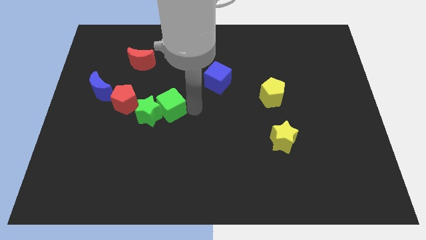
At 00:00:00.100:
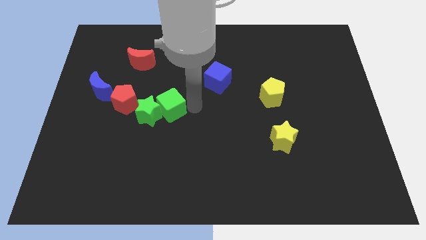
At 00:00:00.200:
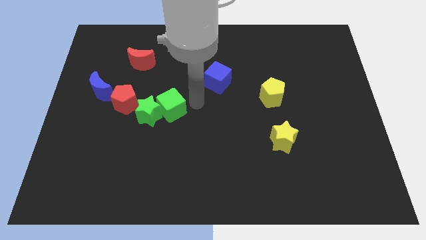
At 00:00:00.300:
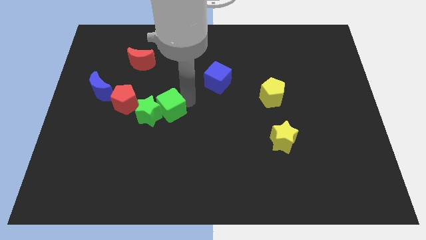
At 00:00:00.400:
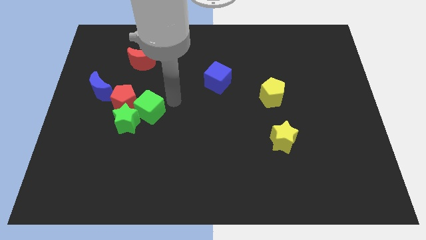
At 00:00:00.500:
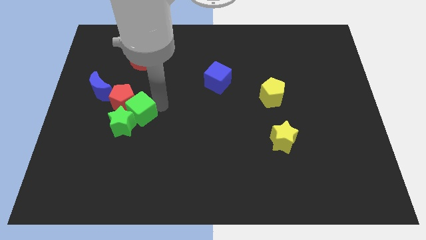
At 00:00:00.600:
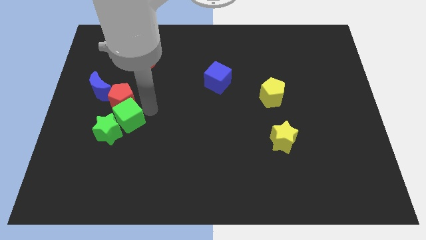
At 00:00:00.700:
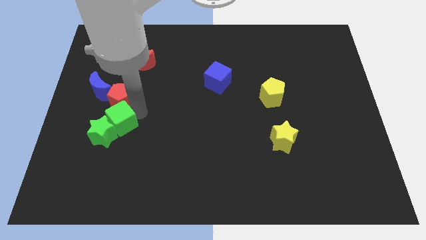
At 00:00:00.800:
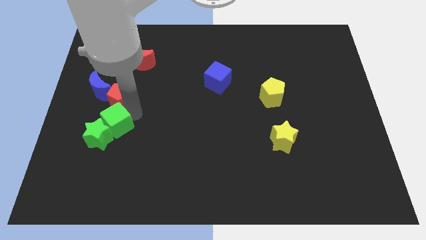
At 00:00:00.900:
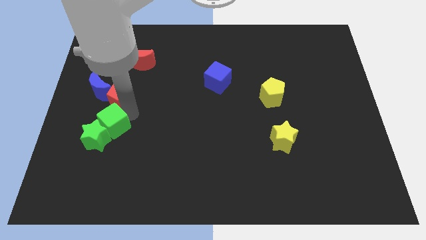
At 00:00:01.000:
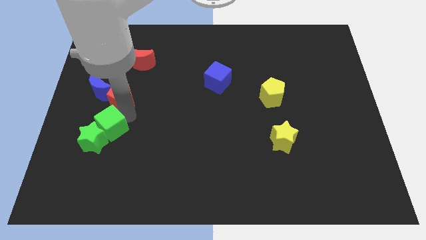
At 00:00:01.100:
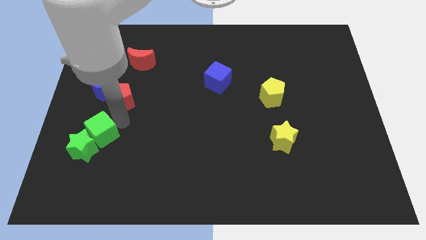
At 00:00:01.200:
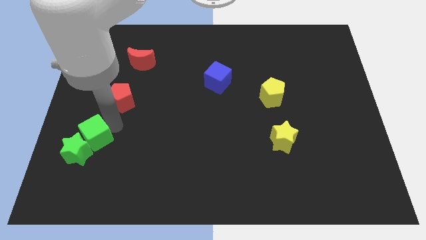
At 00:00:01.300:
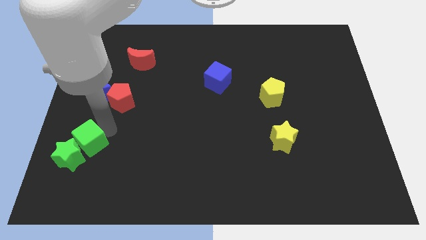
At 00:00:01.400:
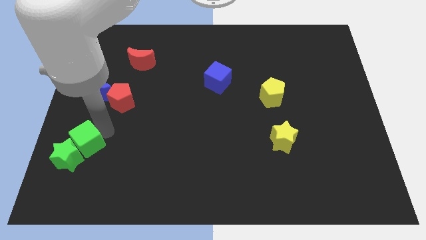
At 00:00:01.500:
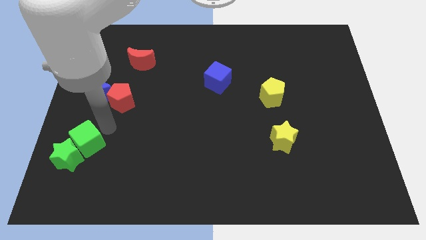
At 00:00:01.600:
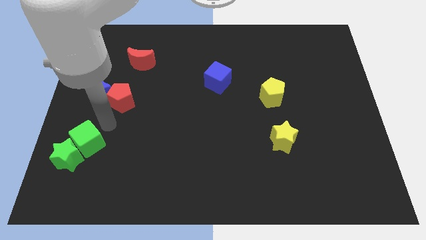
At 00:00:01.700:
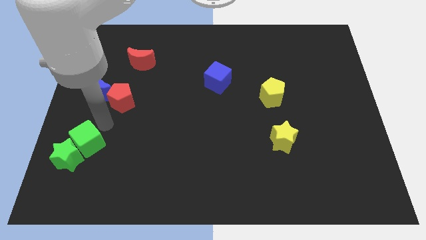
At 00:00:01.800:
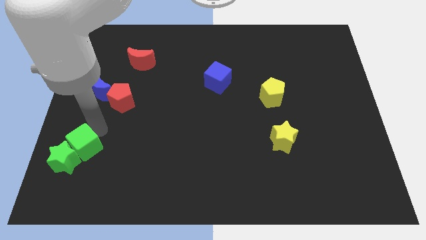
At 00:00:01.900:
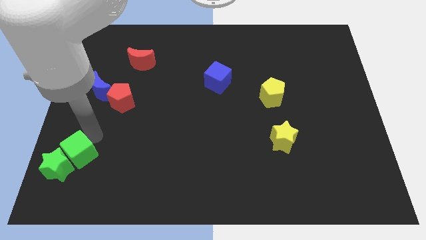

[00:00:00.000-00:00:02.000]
push the green cube into the green star

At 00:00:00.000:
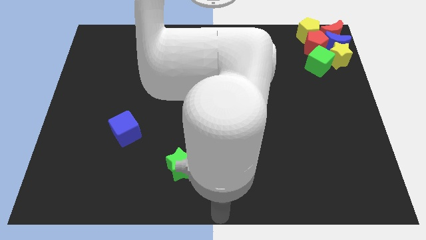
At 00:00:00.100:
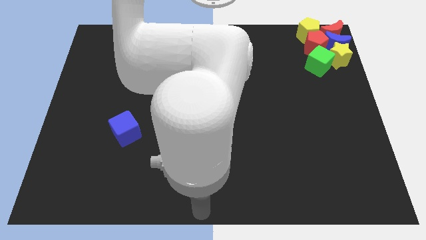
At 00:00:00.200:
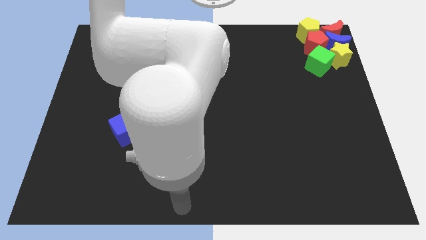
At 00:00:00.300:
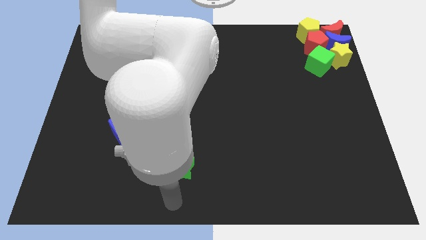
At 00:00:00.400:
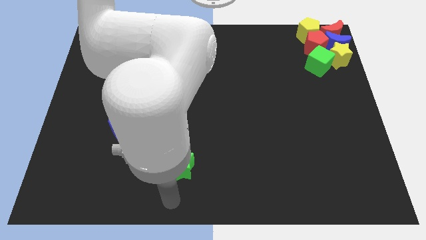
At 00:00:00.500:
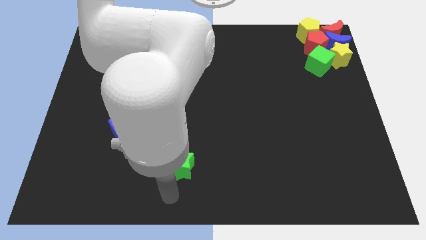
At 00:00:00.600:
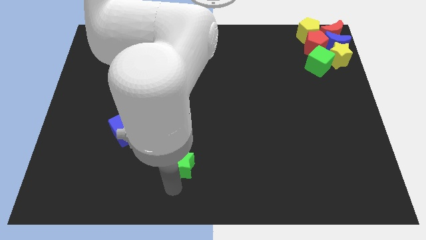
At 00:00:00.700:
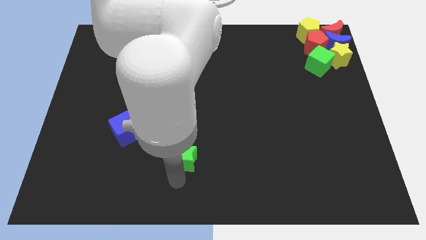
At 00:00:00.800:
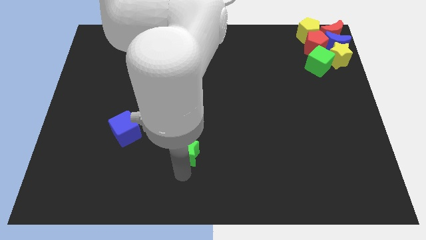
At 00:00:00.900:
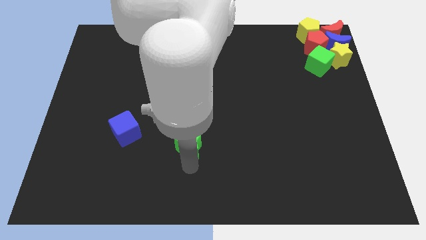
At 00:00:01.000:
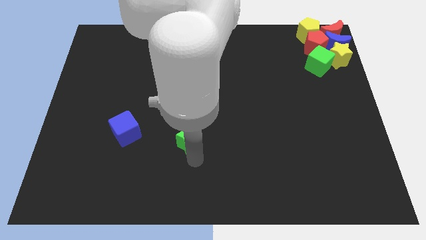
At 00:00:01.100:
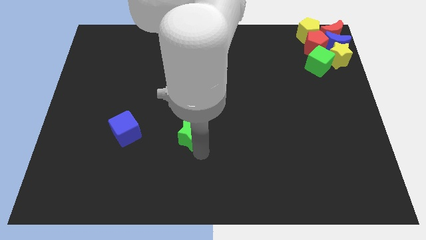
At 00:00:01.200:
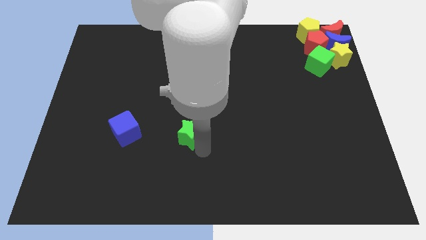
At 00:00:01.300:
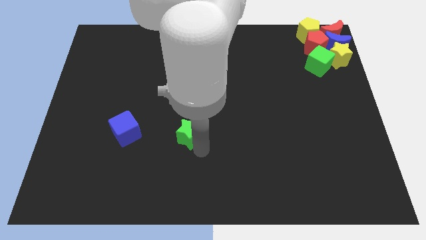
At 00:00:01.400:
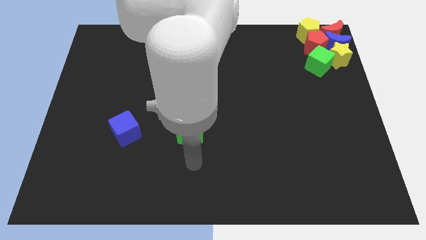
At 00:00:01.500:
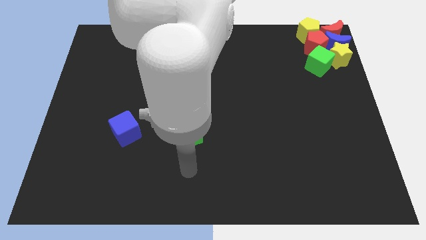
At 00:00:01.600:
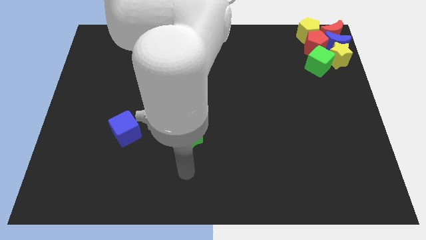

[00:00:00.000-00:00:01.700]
push the green star to the right of the blue cube

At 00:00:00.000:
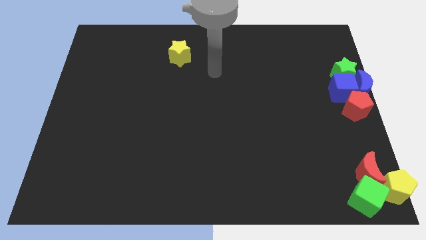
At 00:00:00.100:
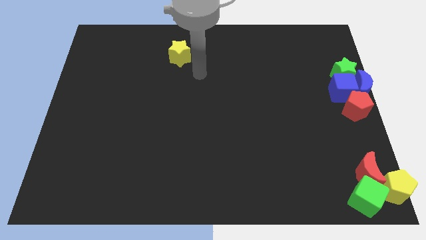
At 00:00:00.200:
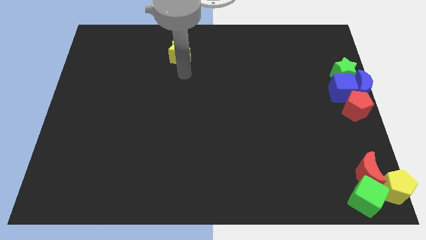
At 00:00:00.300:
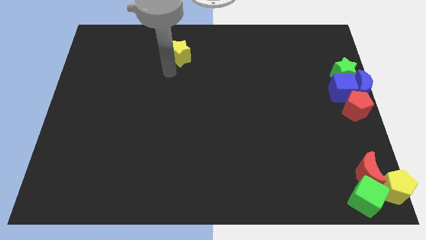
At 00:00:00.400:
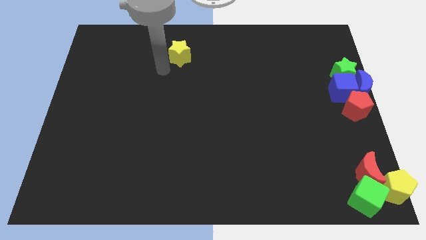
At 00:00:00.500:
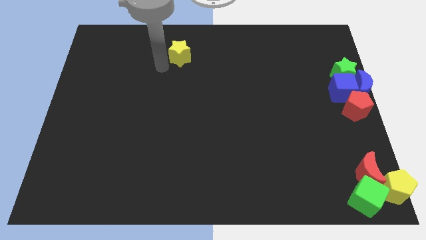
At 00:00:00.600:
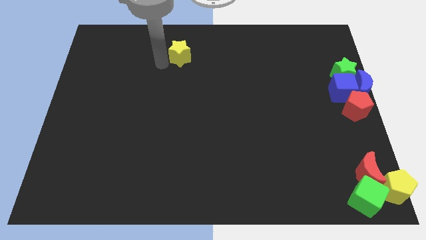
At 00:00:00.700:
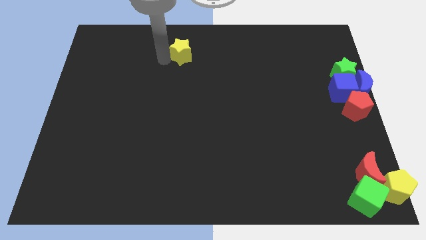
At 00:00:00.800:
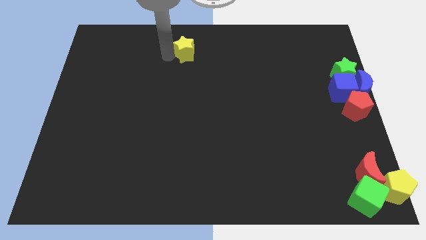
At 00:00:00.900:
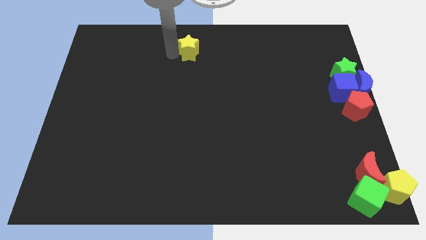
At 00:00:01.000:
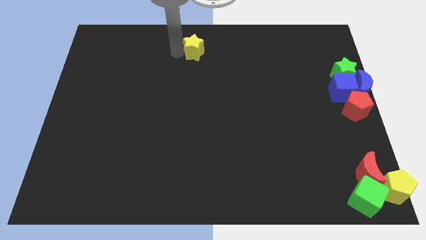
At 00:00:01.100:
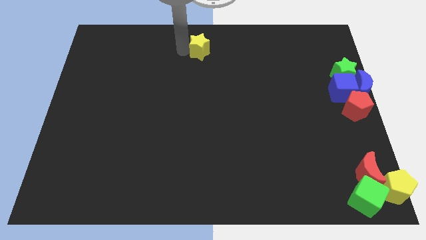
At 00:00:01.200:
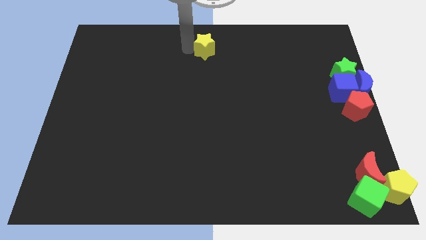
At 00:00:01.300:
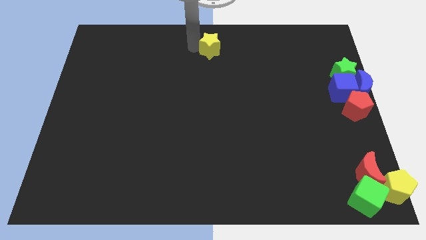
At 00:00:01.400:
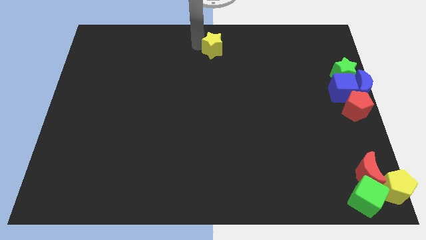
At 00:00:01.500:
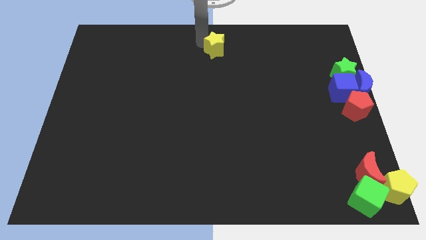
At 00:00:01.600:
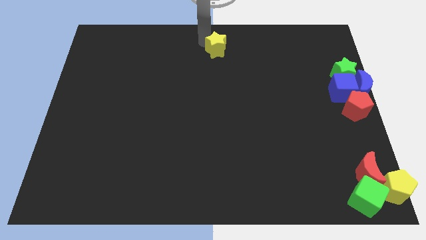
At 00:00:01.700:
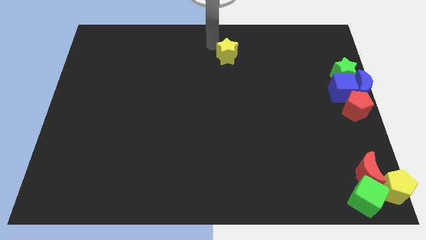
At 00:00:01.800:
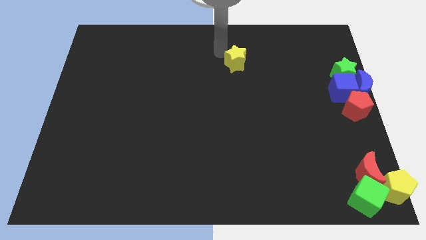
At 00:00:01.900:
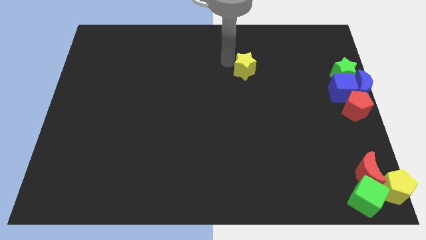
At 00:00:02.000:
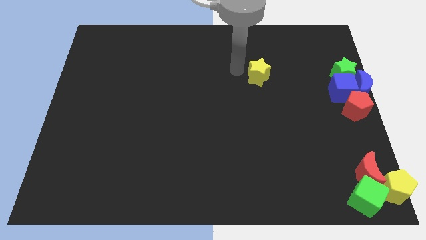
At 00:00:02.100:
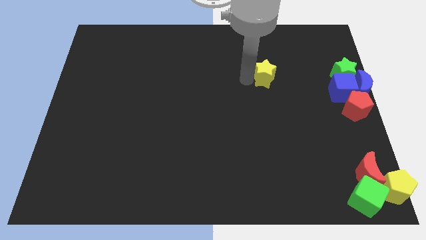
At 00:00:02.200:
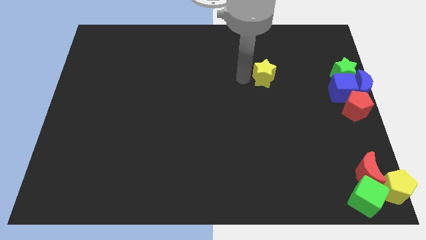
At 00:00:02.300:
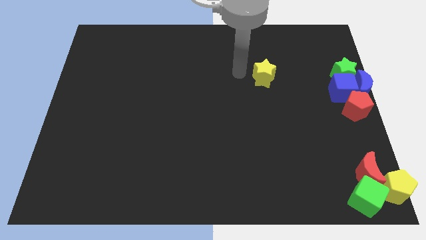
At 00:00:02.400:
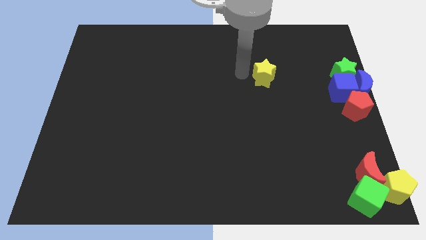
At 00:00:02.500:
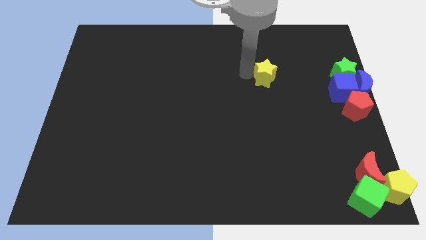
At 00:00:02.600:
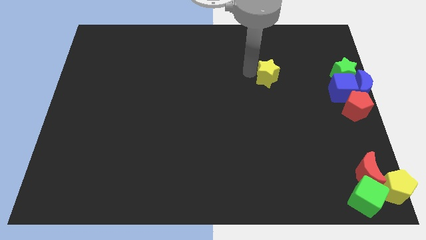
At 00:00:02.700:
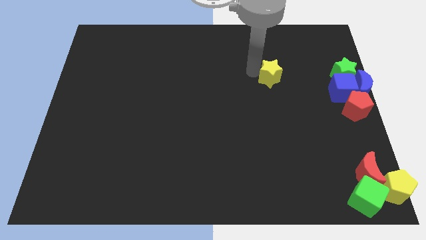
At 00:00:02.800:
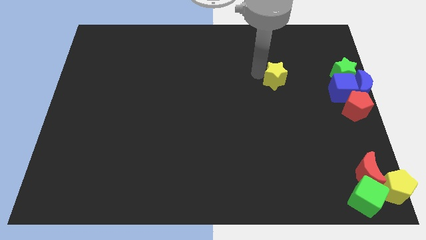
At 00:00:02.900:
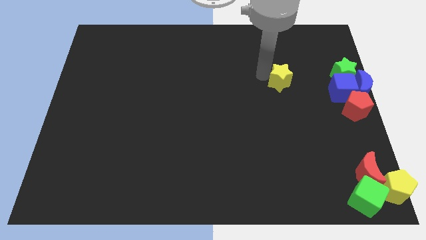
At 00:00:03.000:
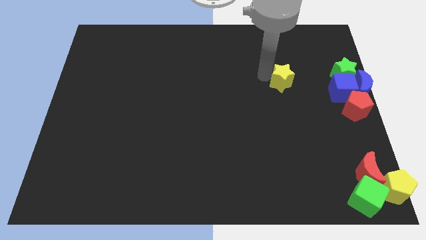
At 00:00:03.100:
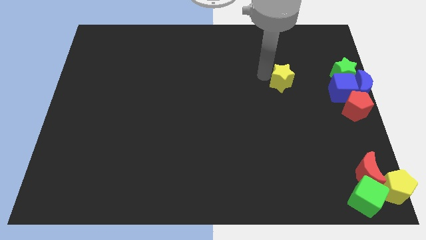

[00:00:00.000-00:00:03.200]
move the yellow star to the left of the group of blocks which is at the centre right

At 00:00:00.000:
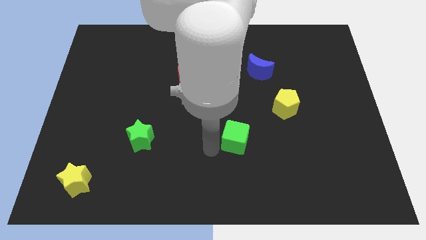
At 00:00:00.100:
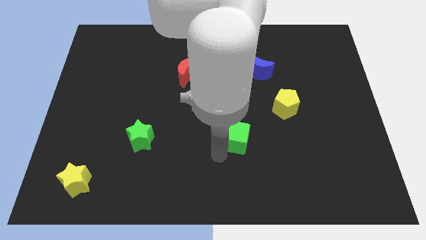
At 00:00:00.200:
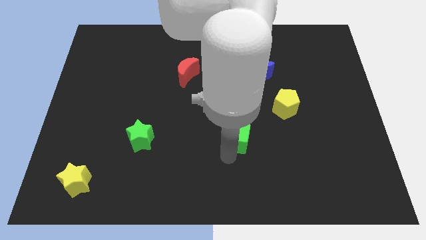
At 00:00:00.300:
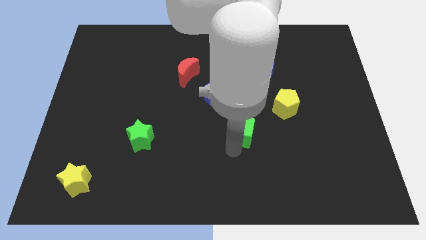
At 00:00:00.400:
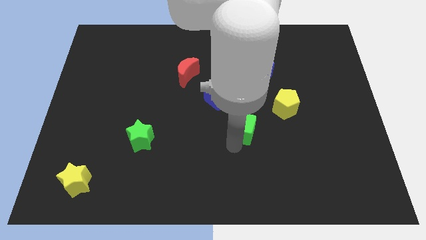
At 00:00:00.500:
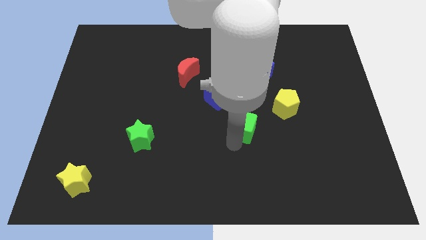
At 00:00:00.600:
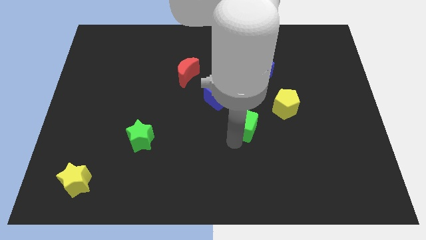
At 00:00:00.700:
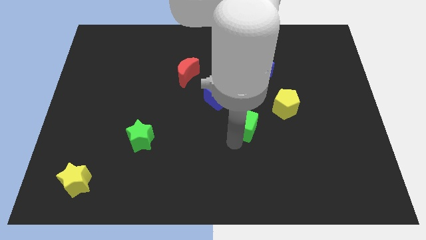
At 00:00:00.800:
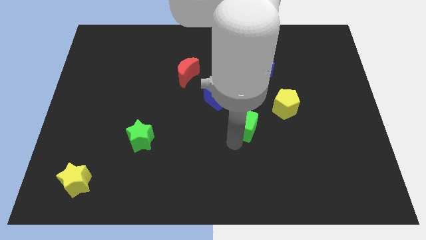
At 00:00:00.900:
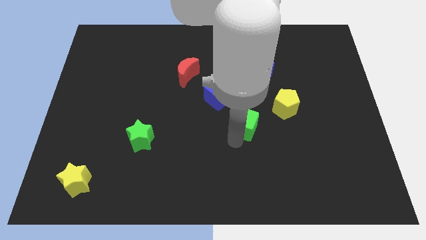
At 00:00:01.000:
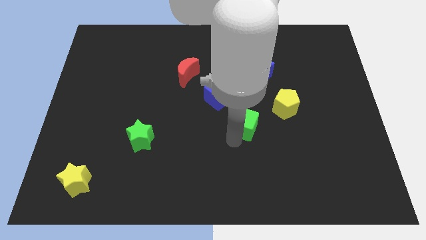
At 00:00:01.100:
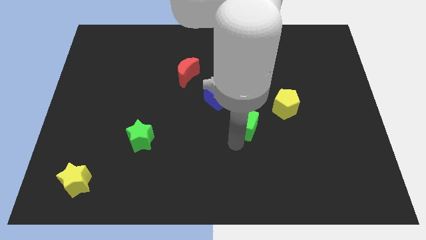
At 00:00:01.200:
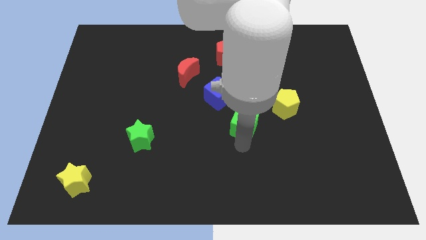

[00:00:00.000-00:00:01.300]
reposition the green cube right to the center of the board

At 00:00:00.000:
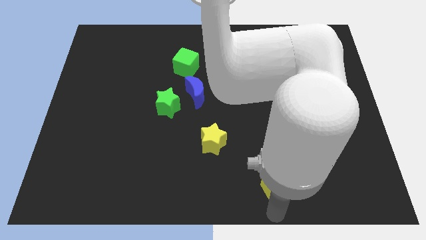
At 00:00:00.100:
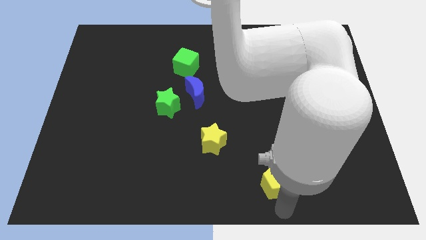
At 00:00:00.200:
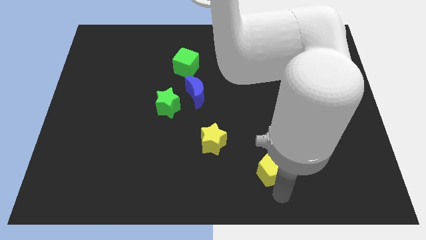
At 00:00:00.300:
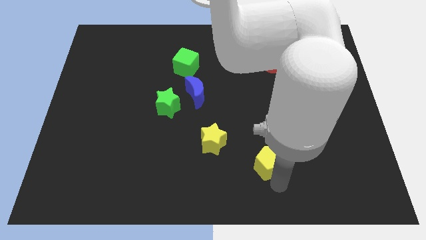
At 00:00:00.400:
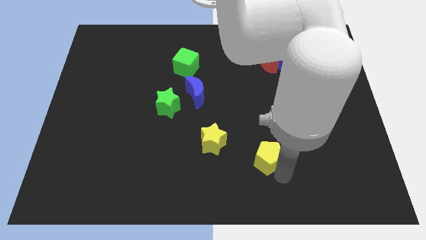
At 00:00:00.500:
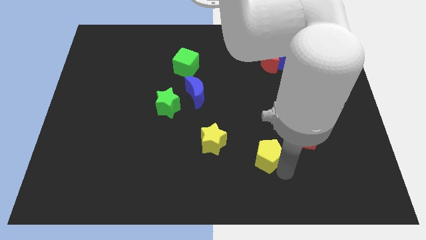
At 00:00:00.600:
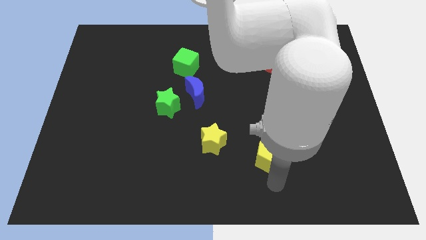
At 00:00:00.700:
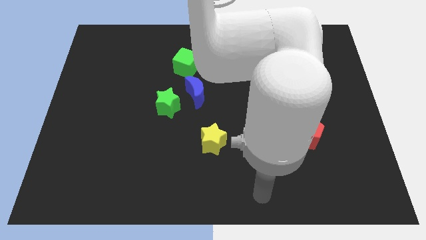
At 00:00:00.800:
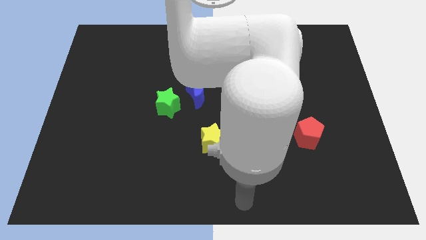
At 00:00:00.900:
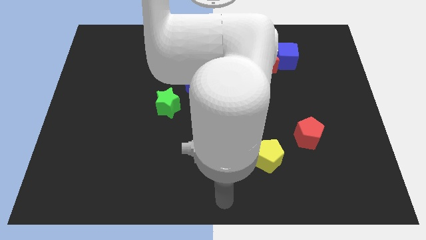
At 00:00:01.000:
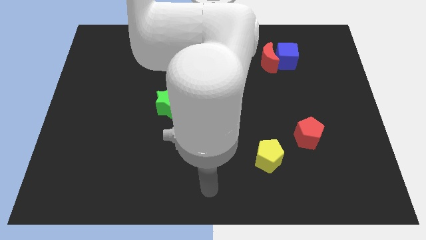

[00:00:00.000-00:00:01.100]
move the yellow pentagon diagonally to the bottom side of the red pentagon
